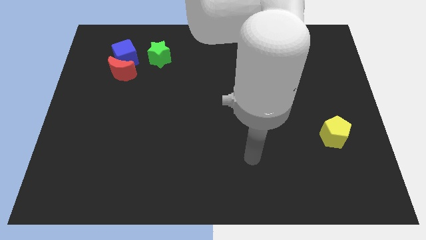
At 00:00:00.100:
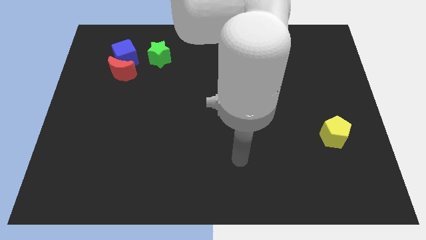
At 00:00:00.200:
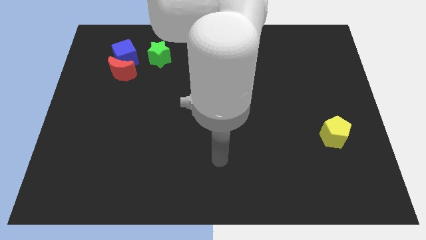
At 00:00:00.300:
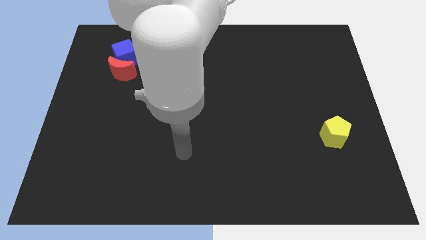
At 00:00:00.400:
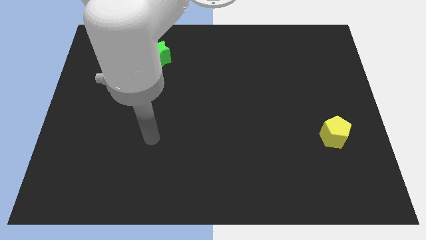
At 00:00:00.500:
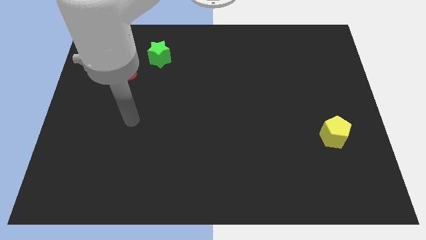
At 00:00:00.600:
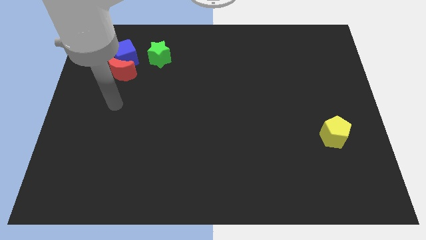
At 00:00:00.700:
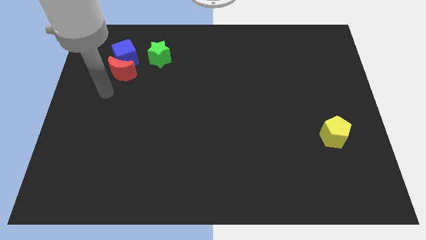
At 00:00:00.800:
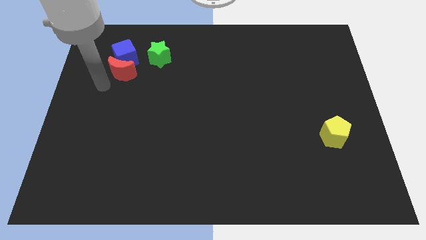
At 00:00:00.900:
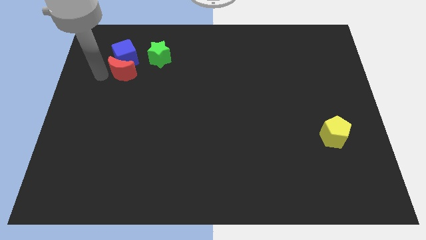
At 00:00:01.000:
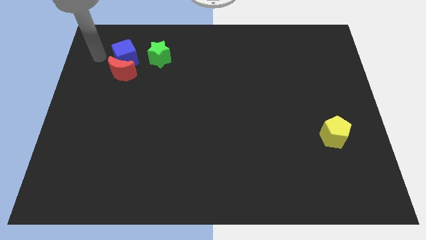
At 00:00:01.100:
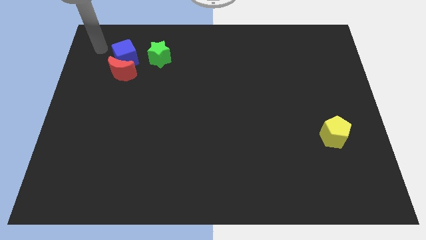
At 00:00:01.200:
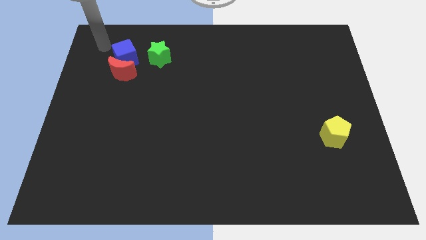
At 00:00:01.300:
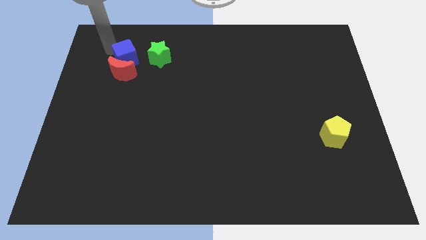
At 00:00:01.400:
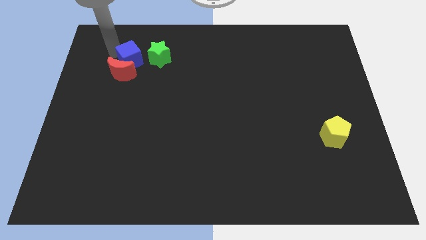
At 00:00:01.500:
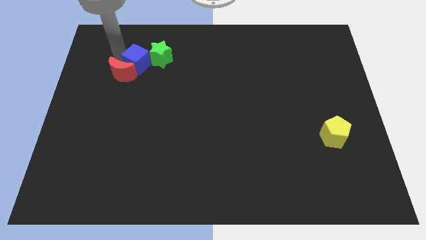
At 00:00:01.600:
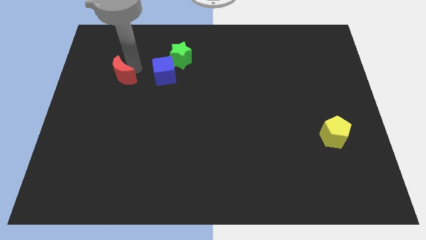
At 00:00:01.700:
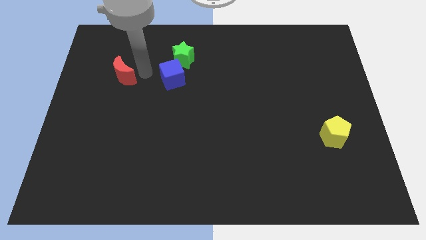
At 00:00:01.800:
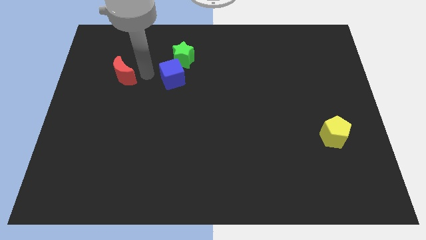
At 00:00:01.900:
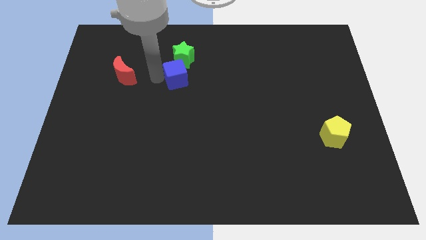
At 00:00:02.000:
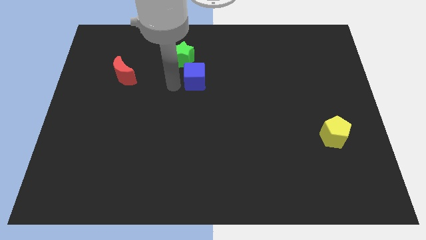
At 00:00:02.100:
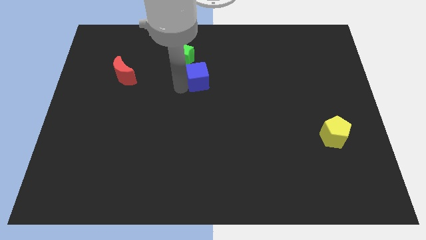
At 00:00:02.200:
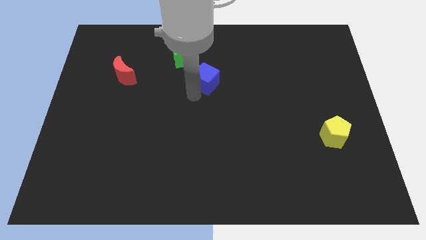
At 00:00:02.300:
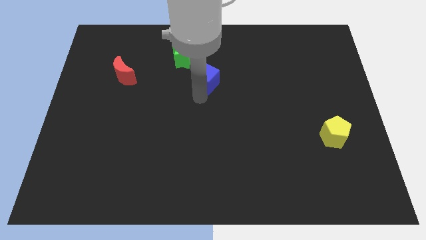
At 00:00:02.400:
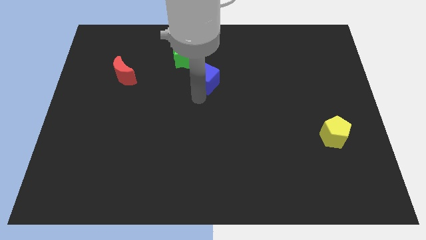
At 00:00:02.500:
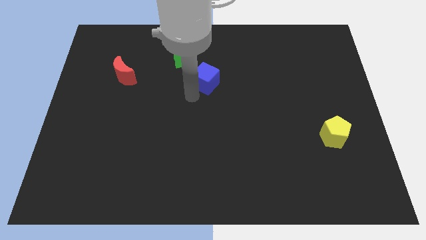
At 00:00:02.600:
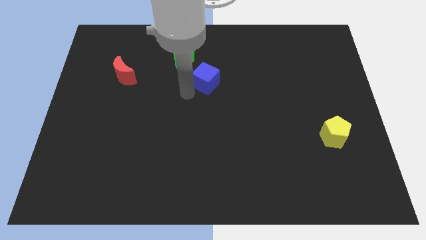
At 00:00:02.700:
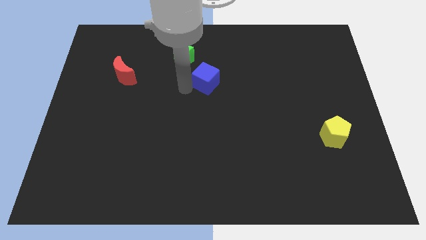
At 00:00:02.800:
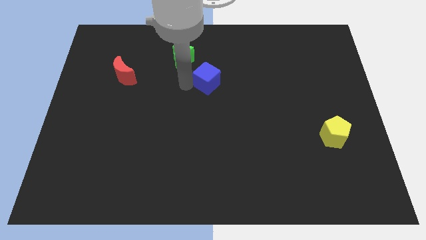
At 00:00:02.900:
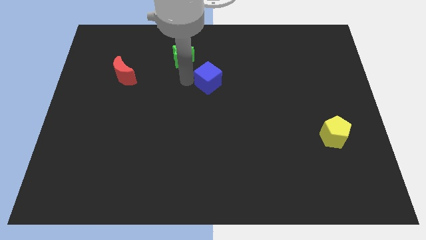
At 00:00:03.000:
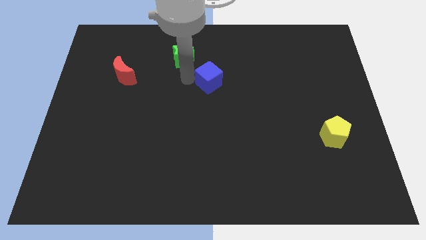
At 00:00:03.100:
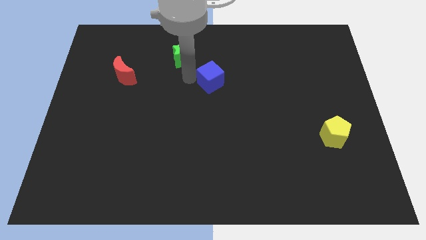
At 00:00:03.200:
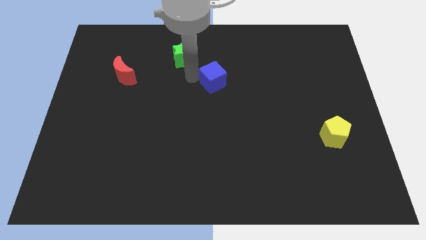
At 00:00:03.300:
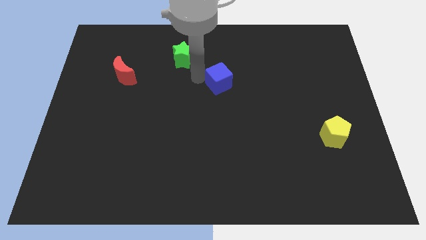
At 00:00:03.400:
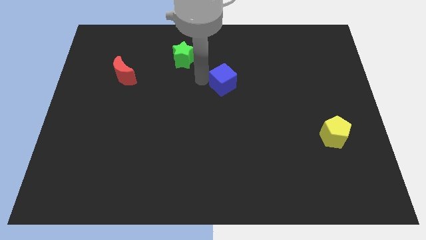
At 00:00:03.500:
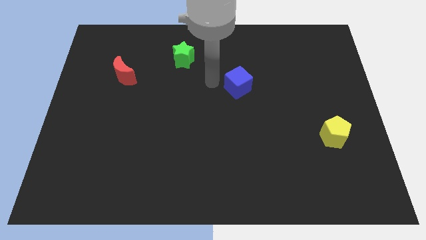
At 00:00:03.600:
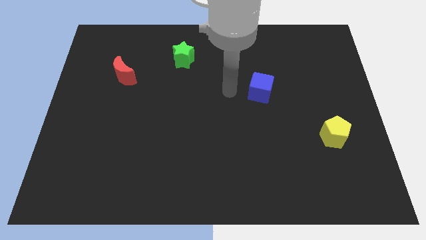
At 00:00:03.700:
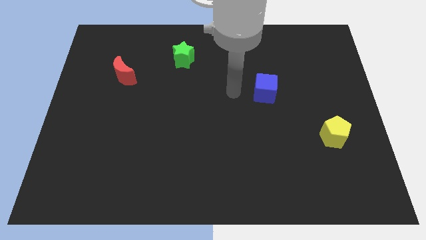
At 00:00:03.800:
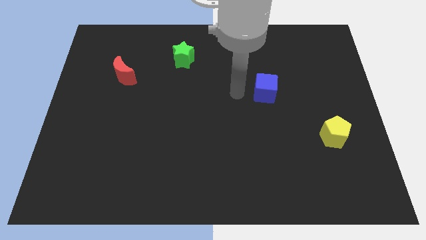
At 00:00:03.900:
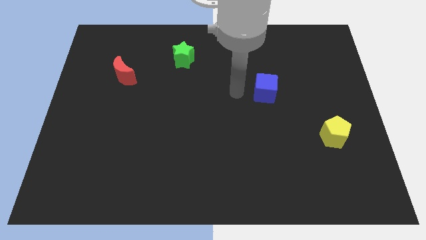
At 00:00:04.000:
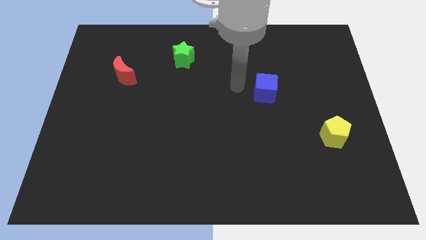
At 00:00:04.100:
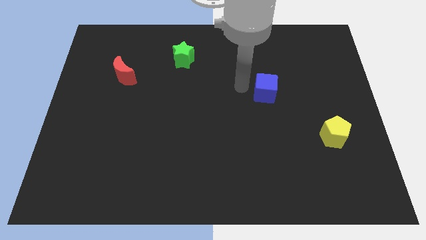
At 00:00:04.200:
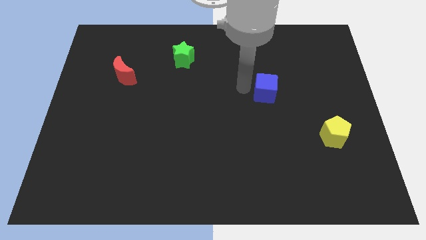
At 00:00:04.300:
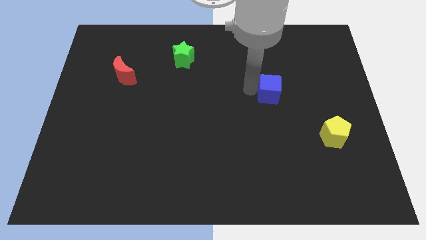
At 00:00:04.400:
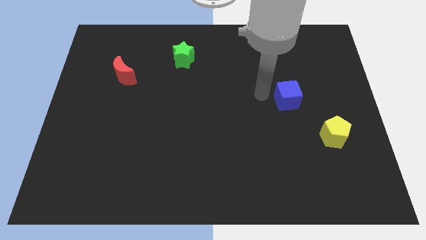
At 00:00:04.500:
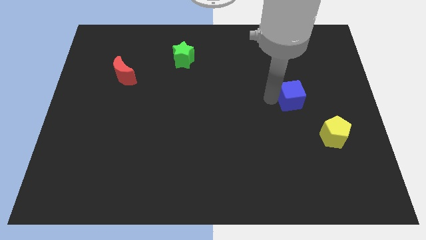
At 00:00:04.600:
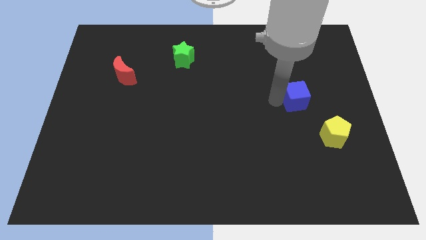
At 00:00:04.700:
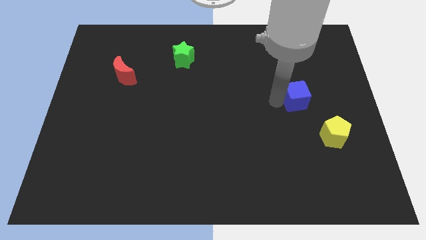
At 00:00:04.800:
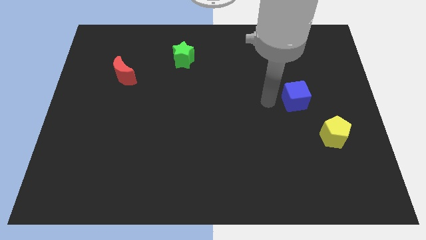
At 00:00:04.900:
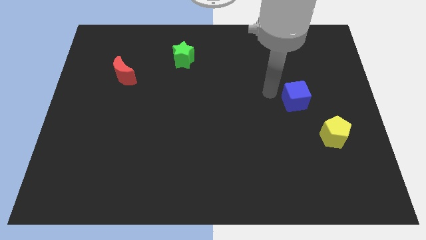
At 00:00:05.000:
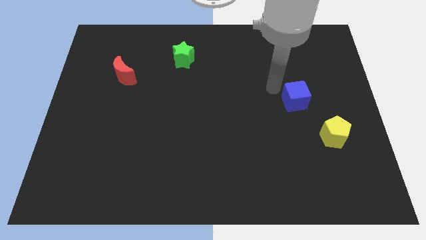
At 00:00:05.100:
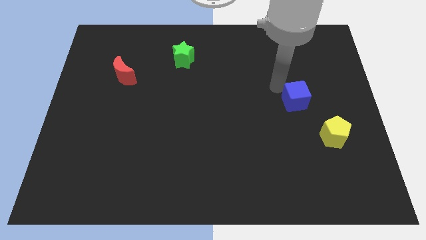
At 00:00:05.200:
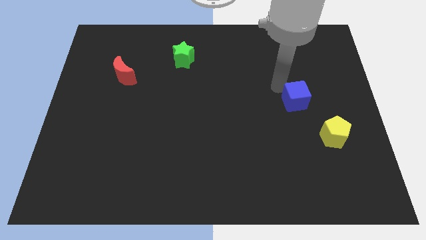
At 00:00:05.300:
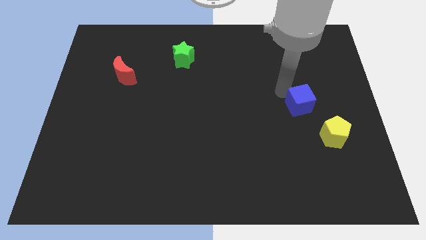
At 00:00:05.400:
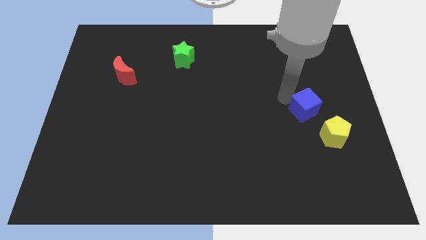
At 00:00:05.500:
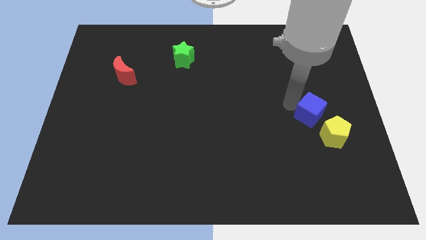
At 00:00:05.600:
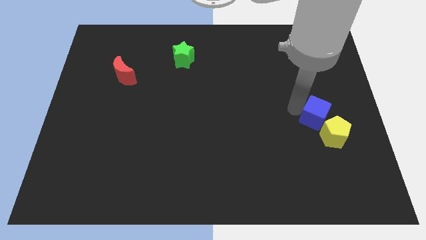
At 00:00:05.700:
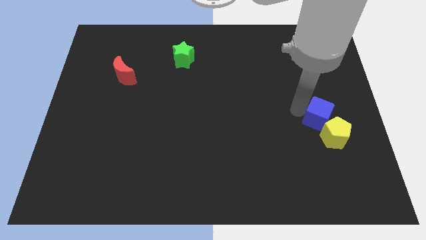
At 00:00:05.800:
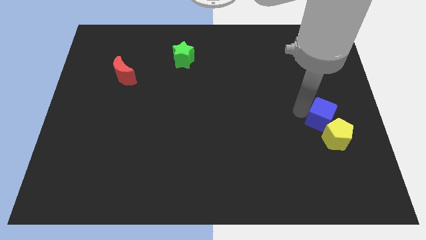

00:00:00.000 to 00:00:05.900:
slide the blue block to the yellow pentagon

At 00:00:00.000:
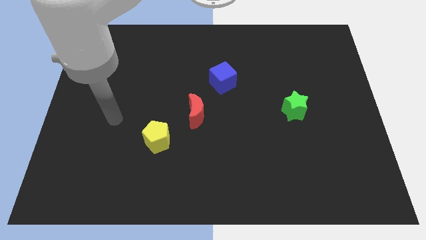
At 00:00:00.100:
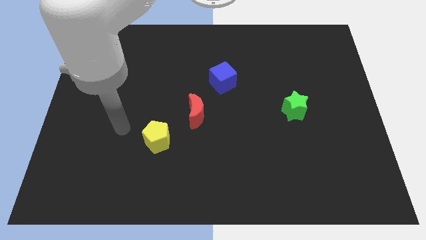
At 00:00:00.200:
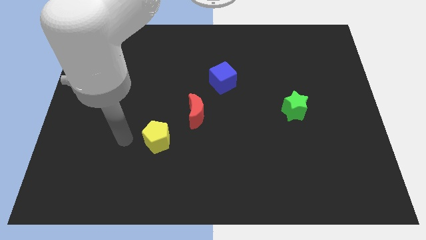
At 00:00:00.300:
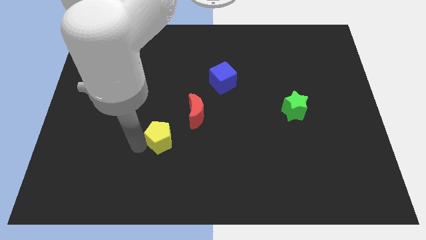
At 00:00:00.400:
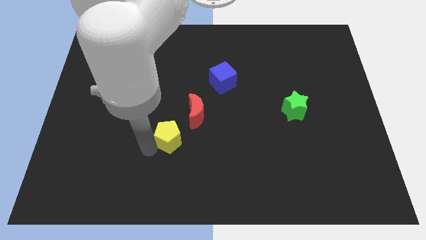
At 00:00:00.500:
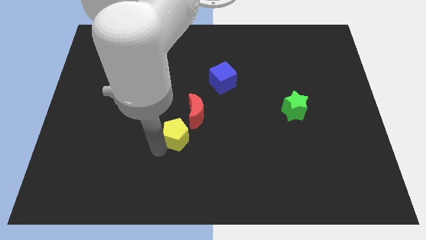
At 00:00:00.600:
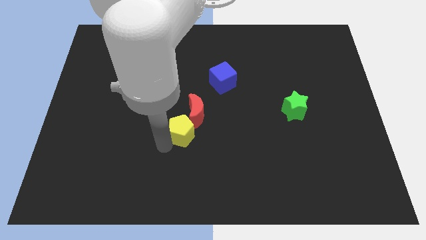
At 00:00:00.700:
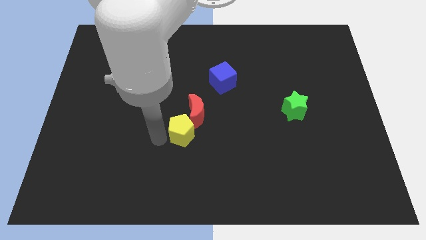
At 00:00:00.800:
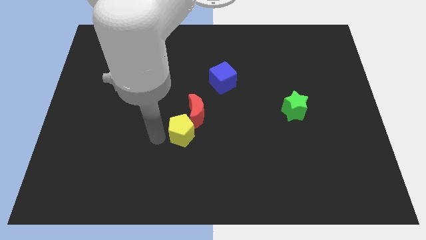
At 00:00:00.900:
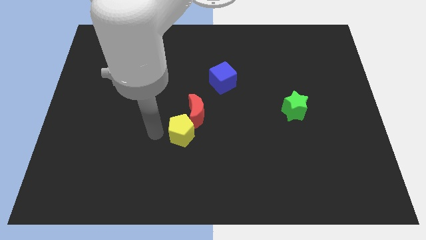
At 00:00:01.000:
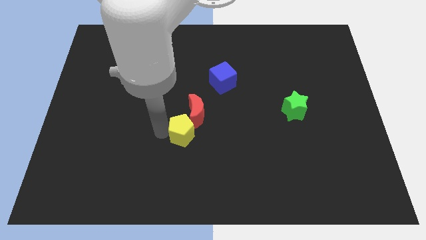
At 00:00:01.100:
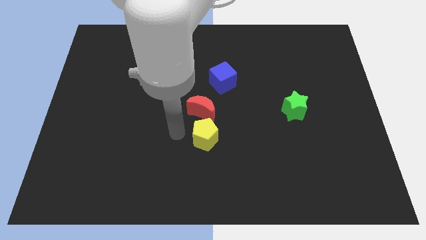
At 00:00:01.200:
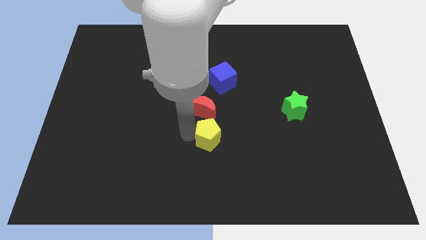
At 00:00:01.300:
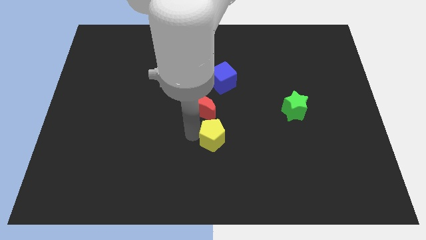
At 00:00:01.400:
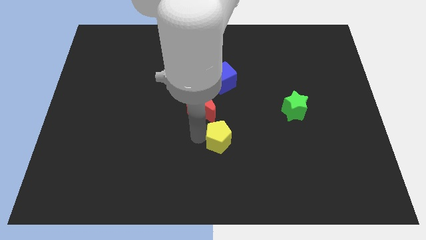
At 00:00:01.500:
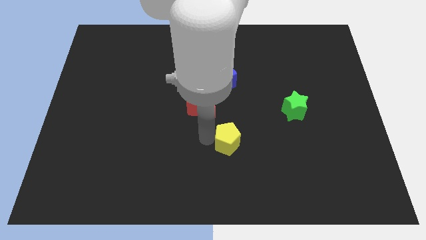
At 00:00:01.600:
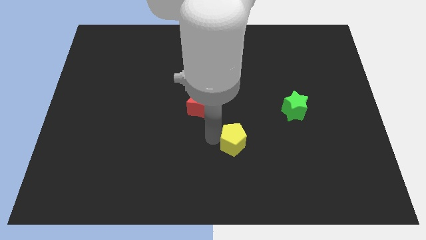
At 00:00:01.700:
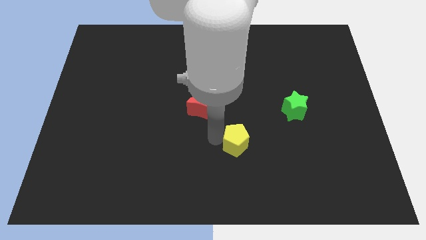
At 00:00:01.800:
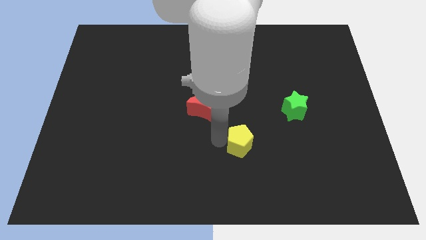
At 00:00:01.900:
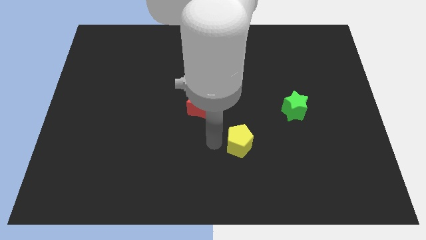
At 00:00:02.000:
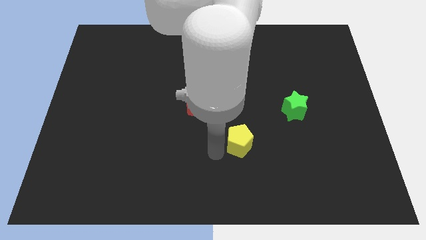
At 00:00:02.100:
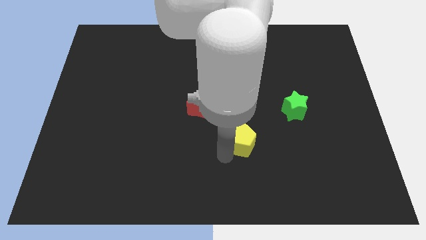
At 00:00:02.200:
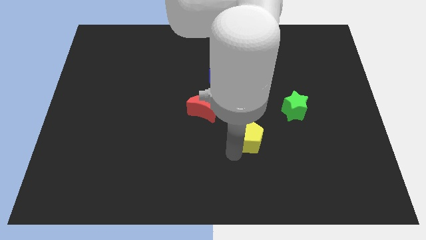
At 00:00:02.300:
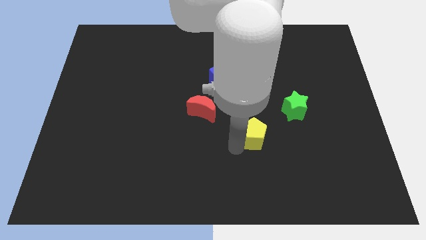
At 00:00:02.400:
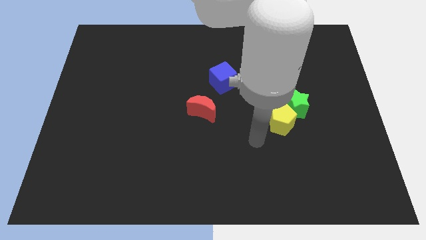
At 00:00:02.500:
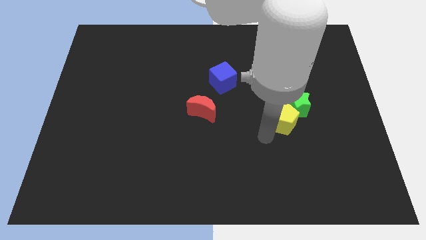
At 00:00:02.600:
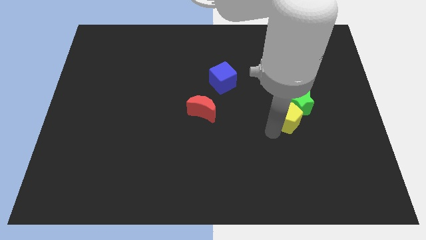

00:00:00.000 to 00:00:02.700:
push the yellow block towards the star
